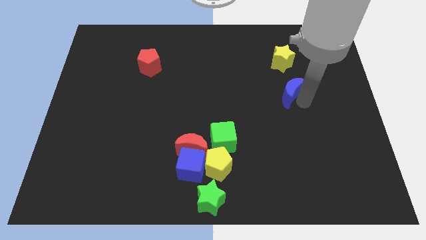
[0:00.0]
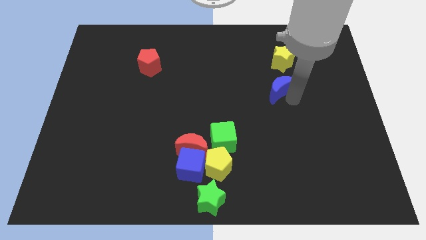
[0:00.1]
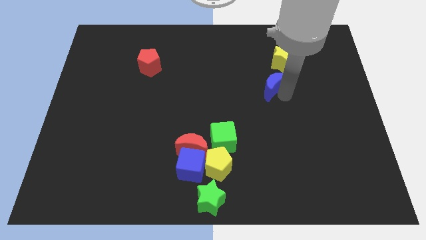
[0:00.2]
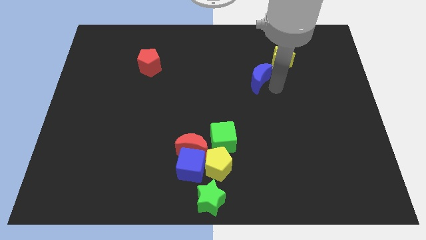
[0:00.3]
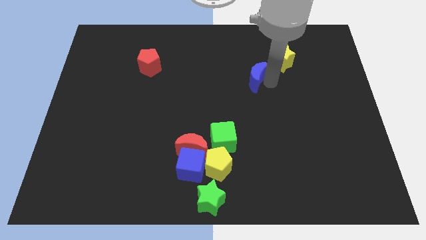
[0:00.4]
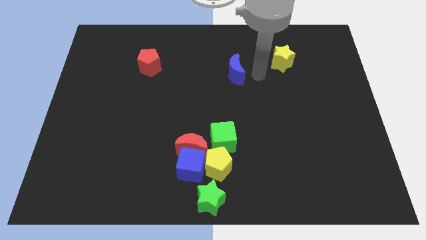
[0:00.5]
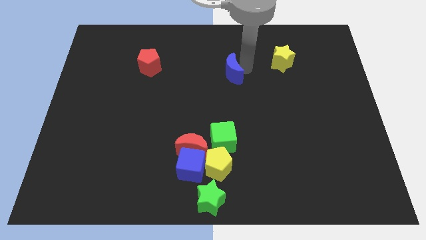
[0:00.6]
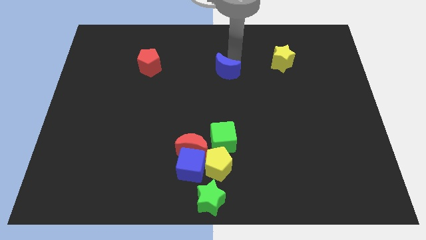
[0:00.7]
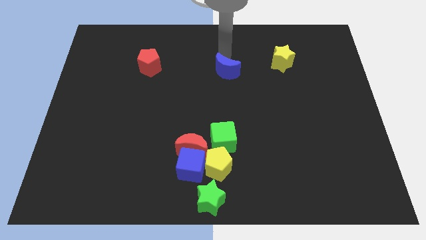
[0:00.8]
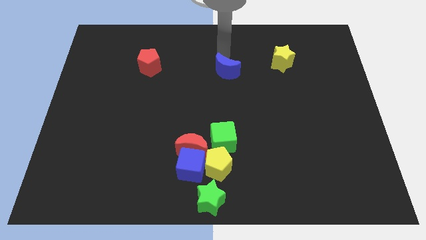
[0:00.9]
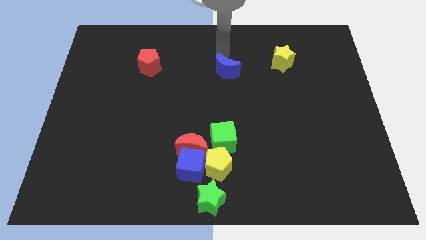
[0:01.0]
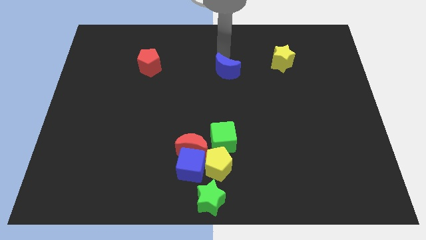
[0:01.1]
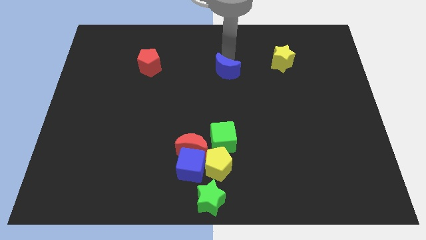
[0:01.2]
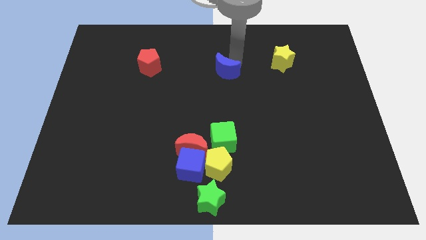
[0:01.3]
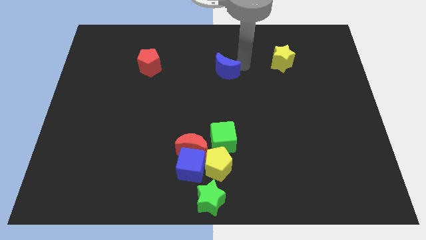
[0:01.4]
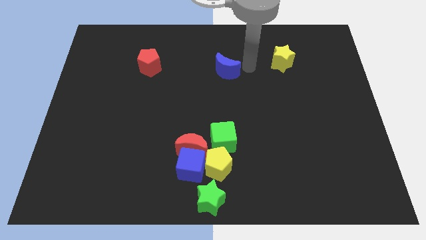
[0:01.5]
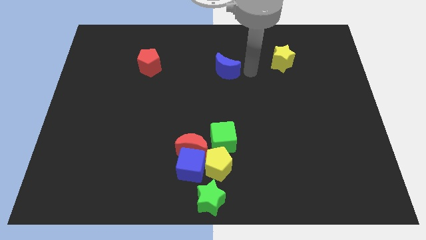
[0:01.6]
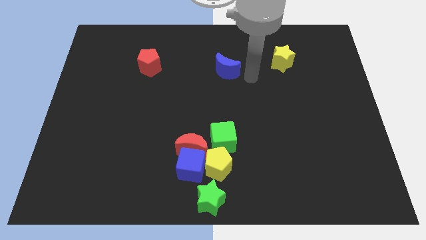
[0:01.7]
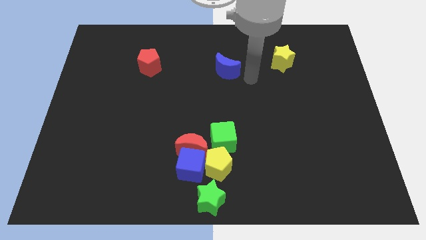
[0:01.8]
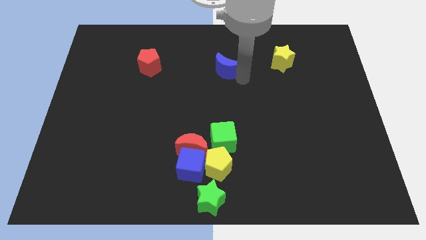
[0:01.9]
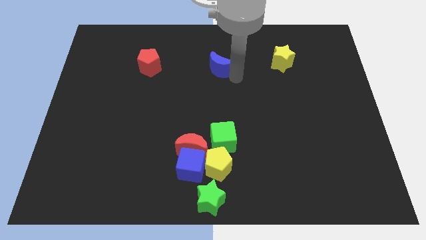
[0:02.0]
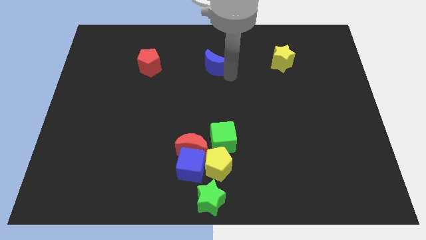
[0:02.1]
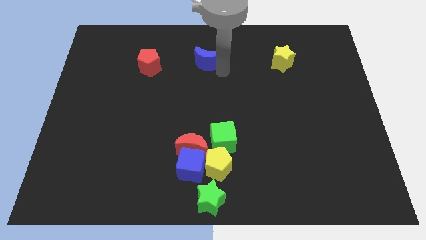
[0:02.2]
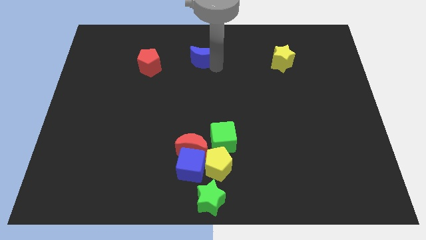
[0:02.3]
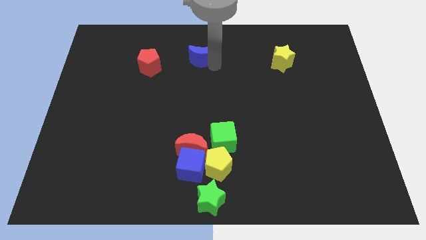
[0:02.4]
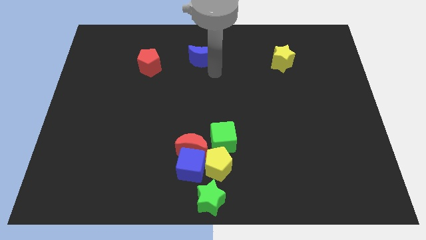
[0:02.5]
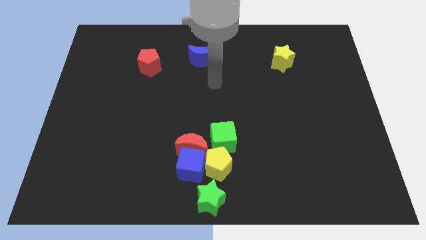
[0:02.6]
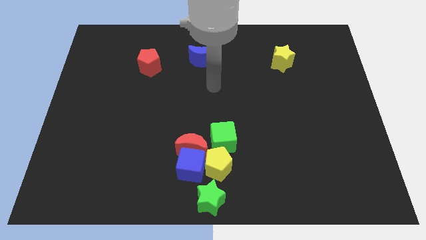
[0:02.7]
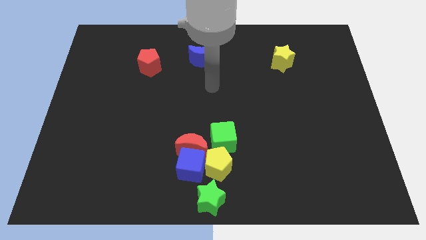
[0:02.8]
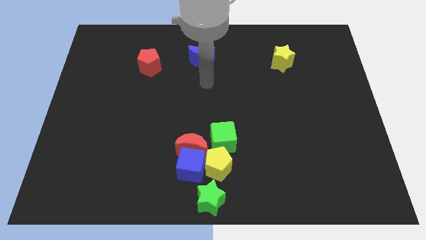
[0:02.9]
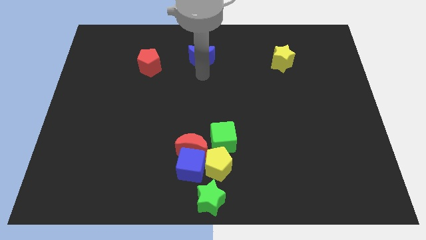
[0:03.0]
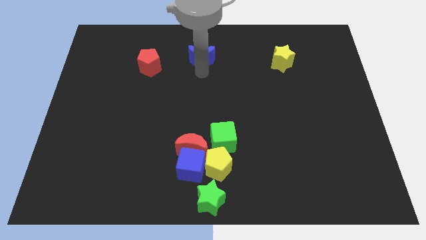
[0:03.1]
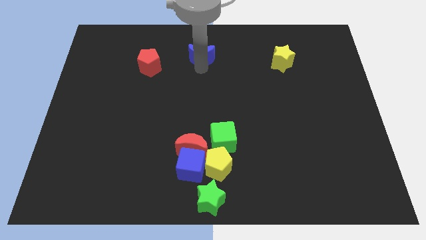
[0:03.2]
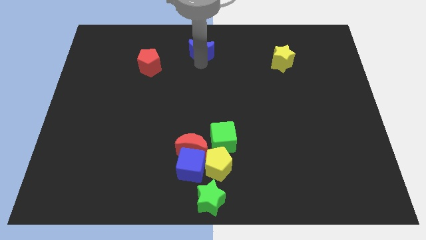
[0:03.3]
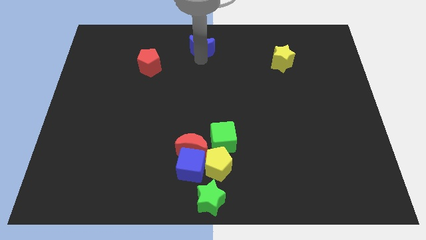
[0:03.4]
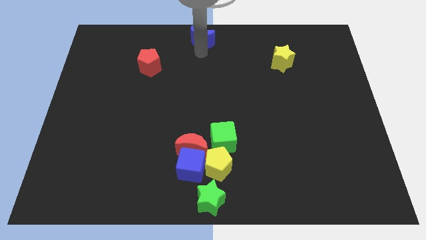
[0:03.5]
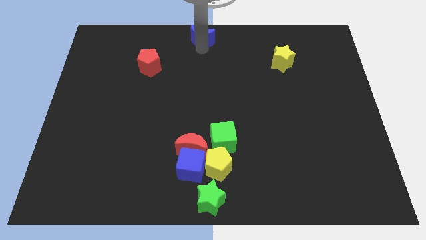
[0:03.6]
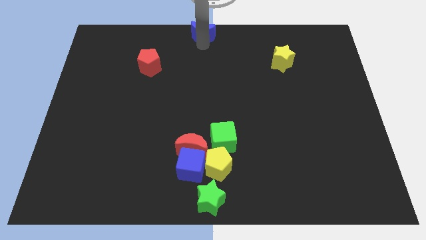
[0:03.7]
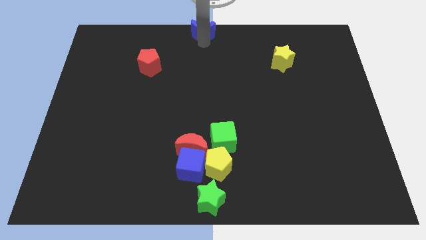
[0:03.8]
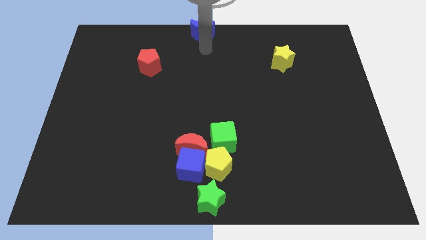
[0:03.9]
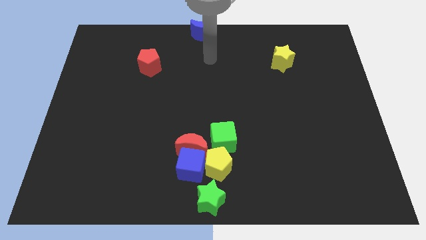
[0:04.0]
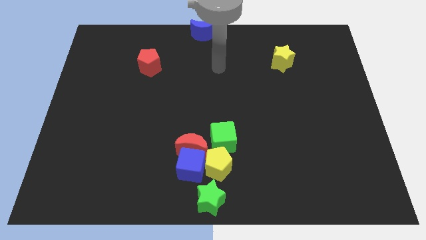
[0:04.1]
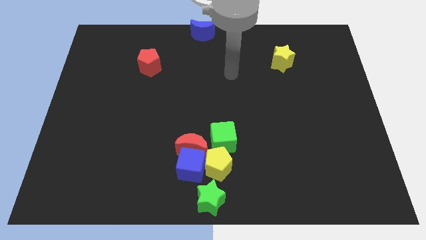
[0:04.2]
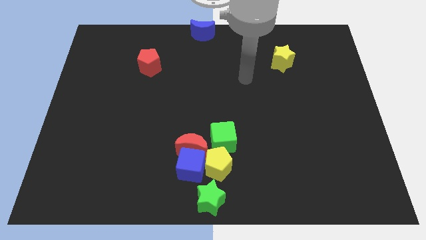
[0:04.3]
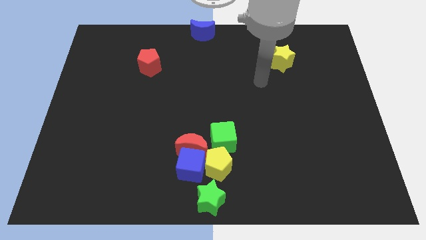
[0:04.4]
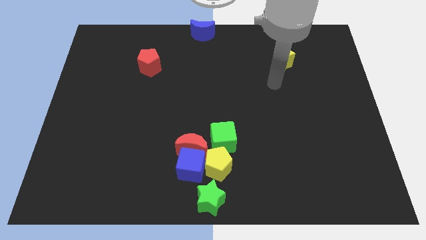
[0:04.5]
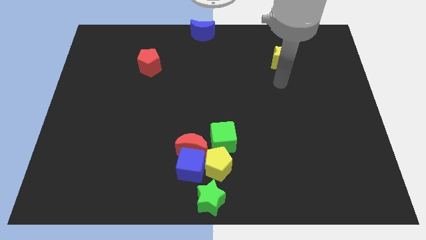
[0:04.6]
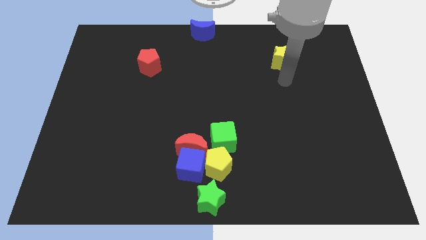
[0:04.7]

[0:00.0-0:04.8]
move the blue moon to the top middle

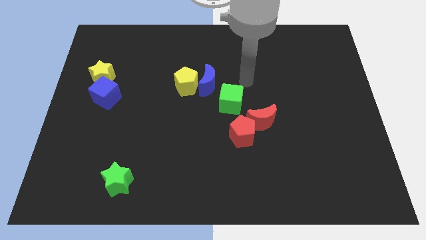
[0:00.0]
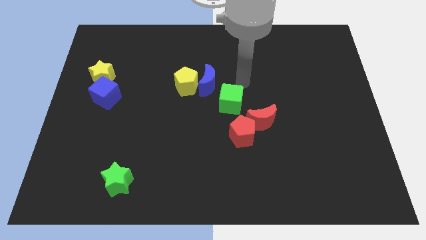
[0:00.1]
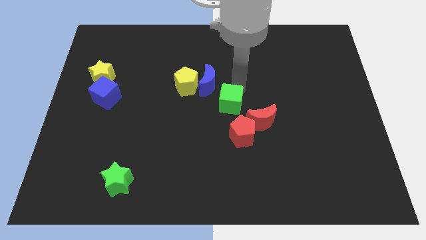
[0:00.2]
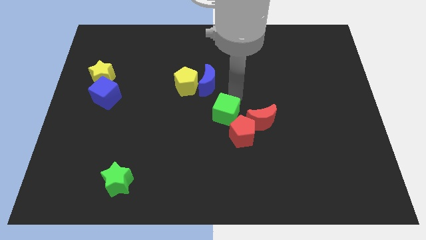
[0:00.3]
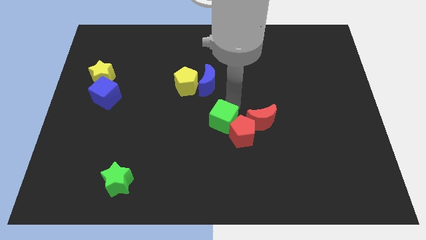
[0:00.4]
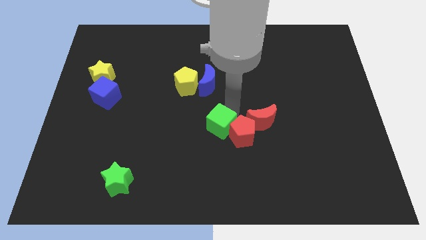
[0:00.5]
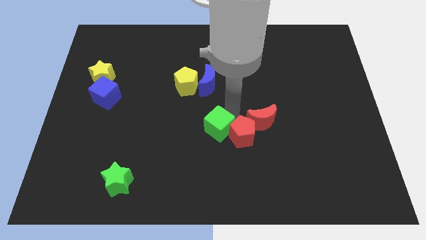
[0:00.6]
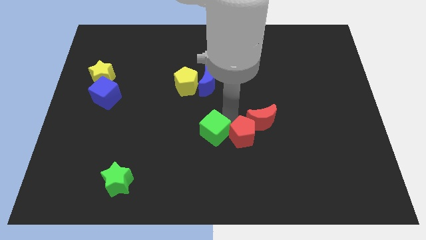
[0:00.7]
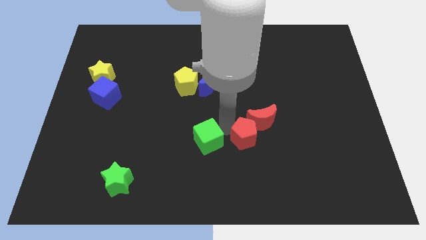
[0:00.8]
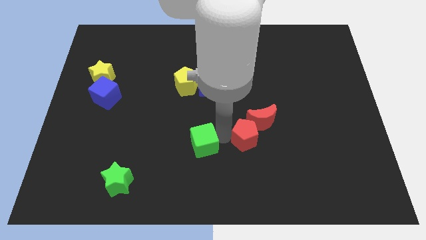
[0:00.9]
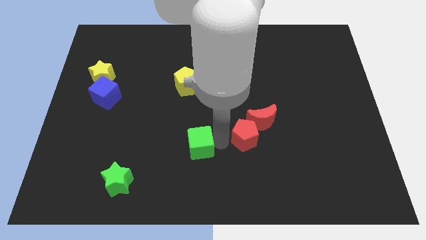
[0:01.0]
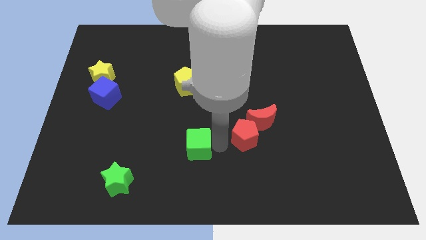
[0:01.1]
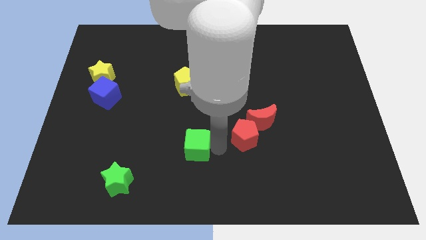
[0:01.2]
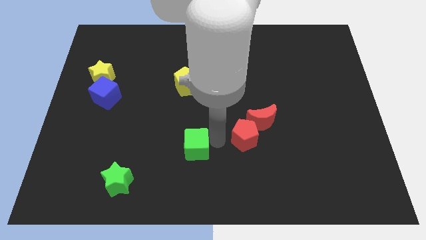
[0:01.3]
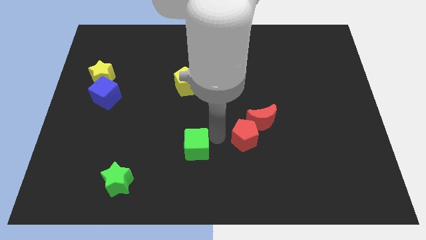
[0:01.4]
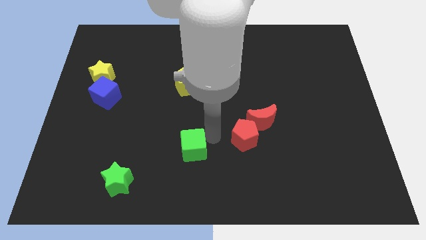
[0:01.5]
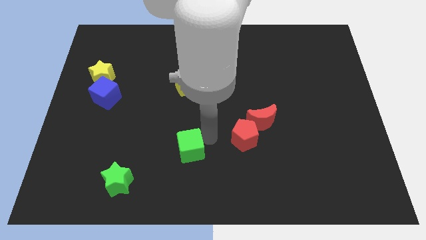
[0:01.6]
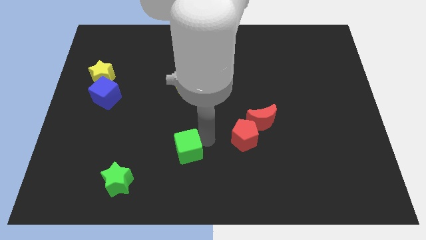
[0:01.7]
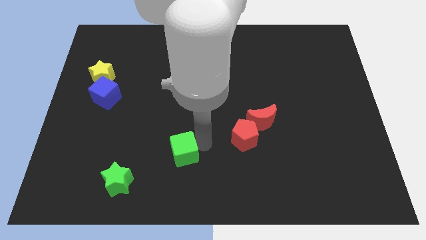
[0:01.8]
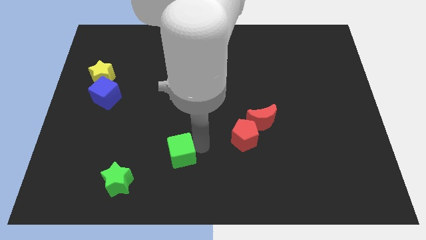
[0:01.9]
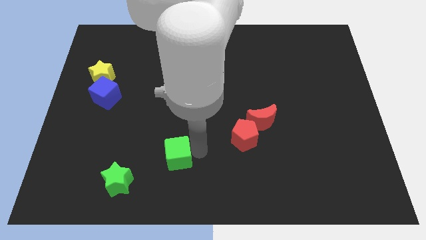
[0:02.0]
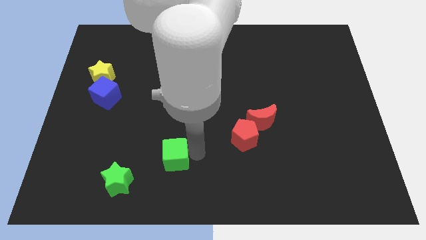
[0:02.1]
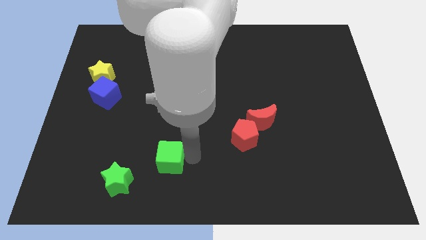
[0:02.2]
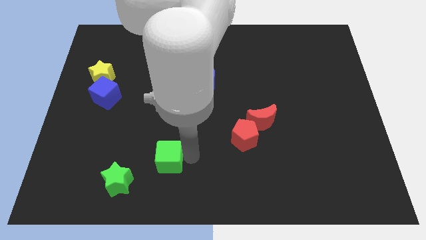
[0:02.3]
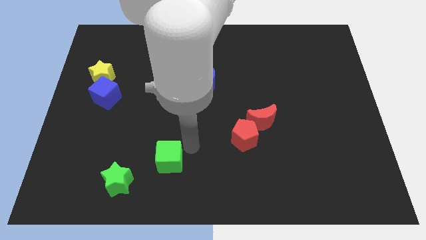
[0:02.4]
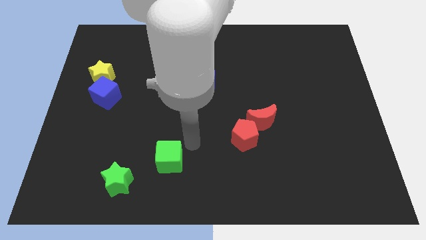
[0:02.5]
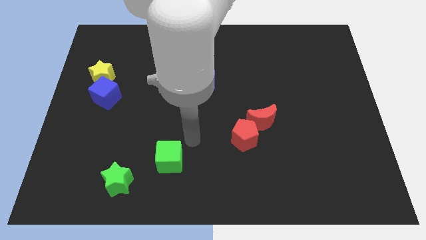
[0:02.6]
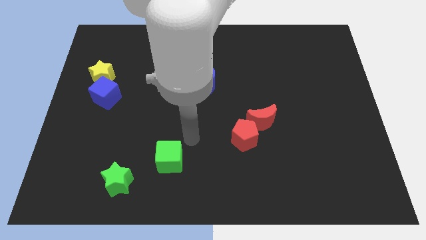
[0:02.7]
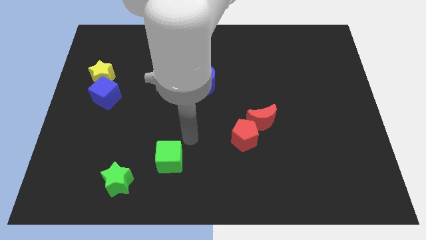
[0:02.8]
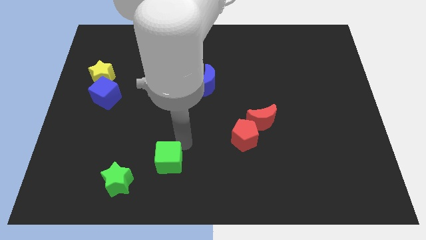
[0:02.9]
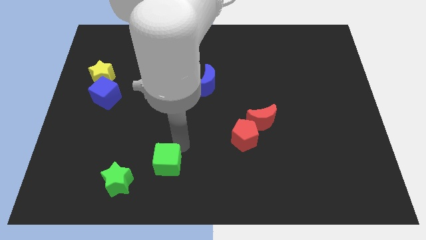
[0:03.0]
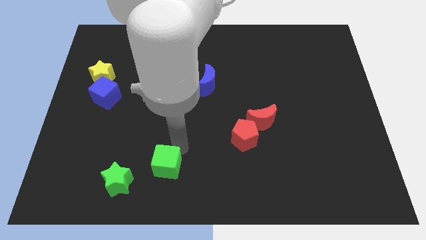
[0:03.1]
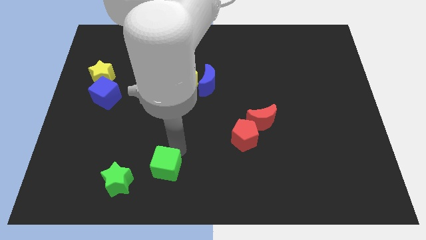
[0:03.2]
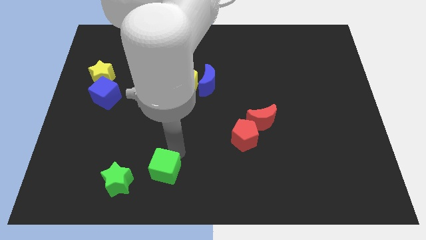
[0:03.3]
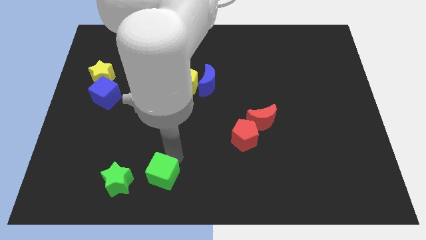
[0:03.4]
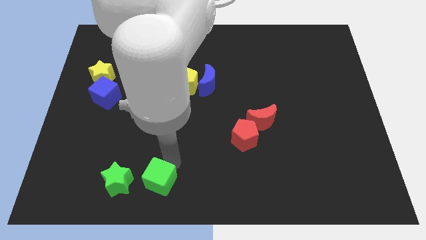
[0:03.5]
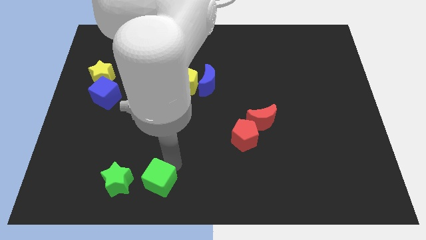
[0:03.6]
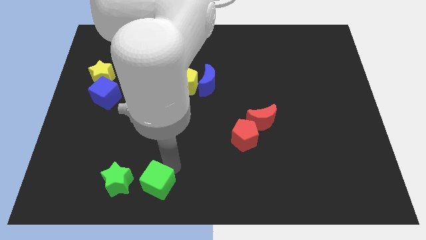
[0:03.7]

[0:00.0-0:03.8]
place the green cube to the right of the green star

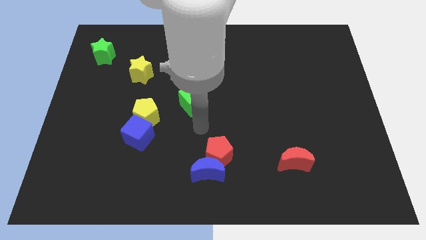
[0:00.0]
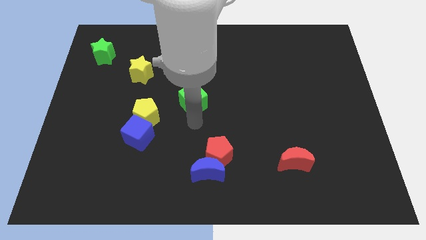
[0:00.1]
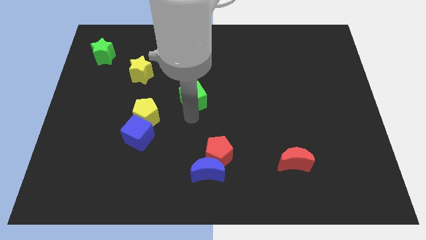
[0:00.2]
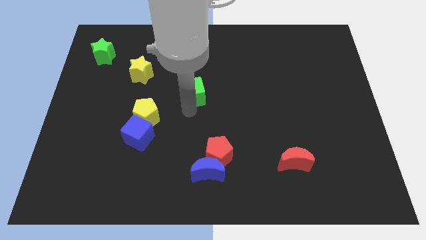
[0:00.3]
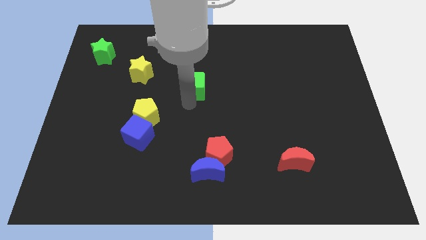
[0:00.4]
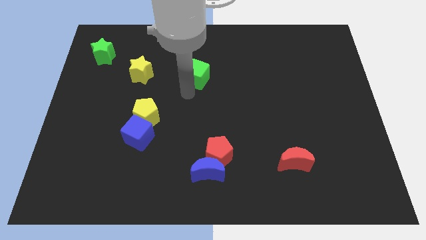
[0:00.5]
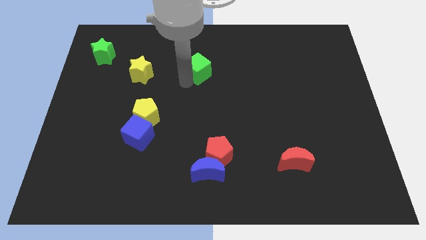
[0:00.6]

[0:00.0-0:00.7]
push the green pentago right to the yellow star
